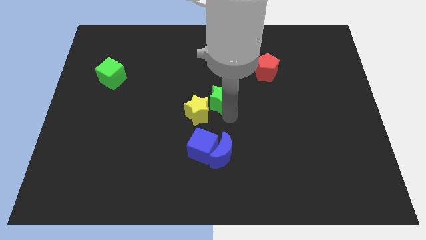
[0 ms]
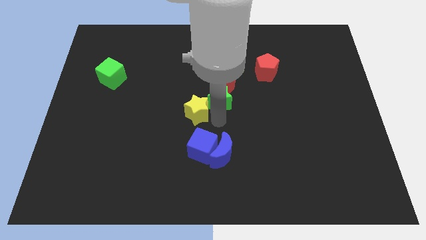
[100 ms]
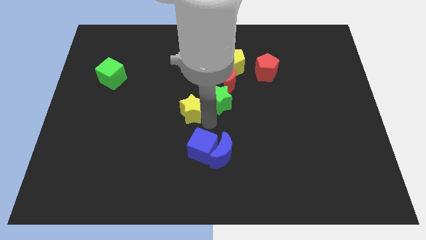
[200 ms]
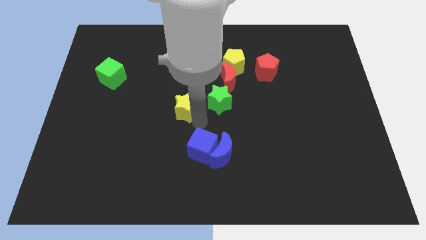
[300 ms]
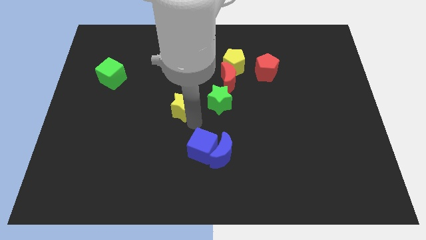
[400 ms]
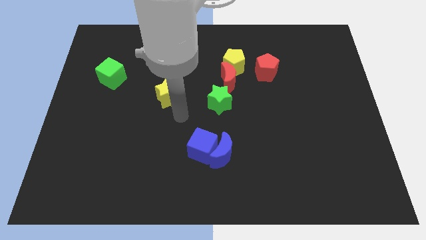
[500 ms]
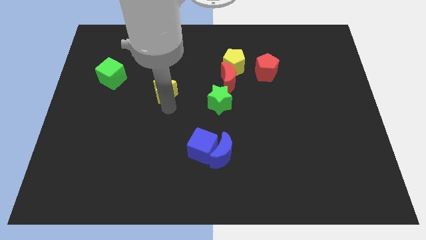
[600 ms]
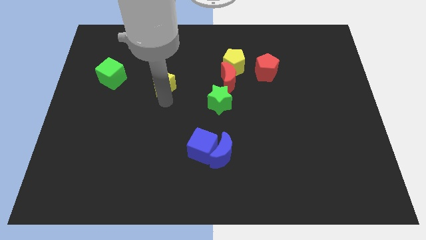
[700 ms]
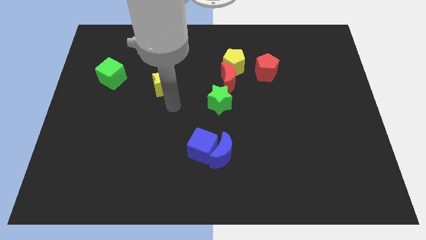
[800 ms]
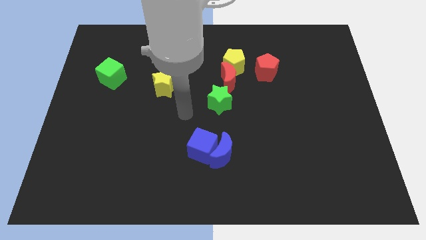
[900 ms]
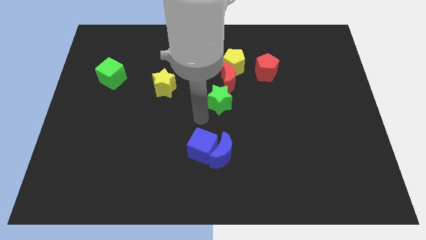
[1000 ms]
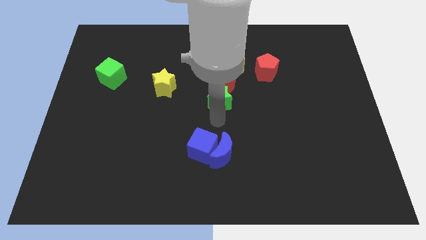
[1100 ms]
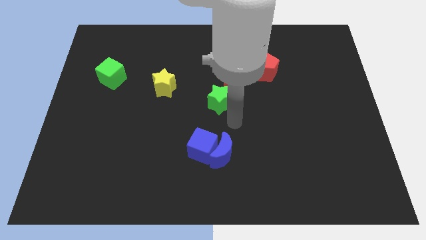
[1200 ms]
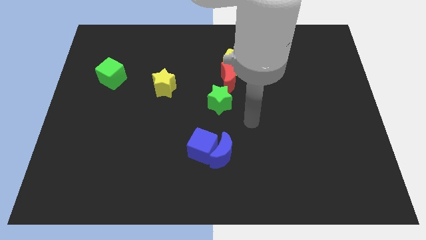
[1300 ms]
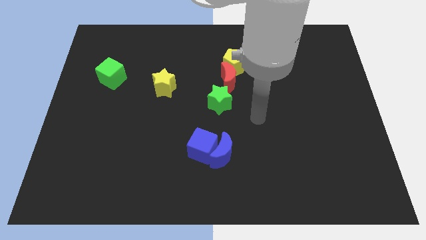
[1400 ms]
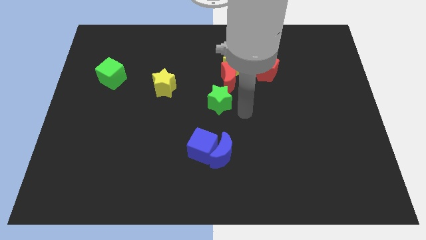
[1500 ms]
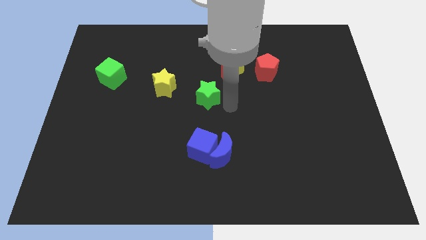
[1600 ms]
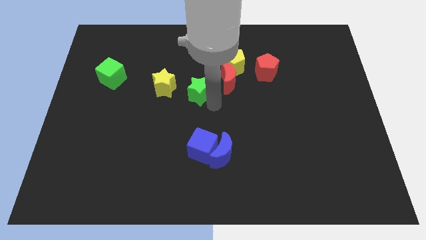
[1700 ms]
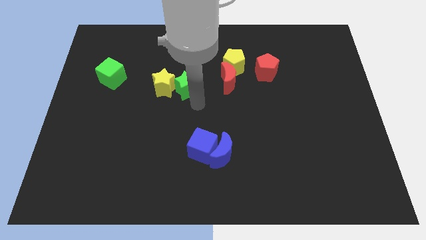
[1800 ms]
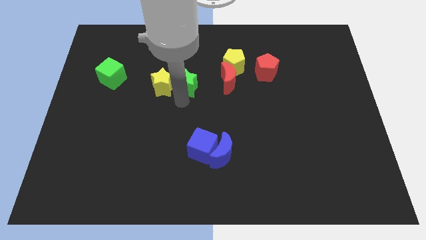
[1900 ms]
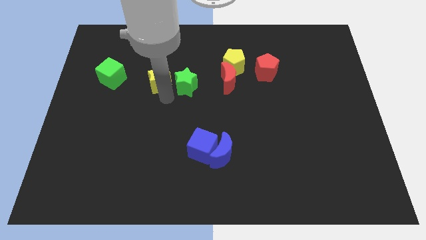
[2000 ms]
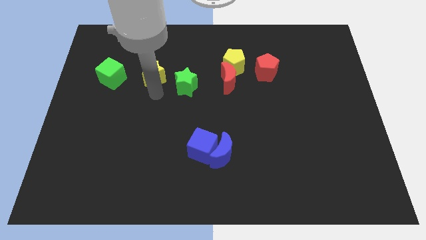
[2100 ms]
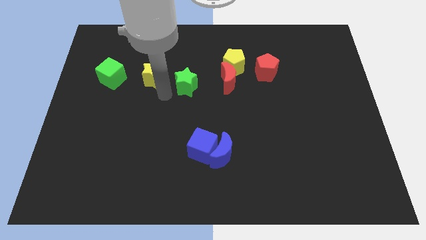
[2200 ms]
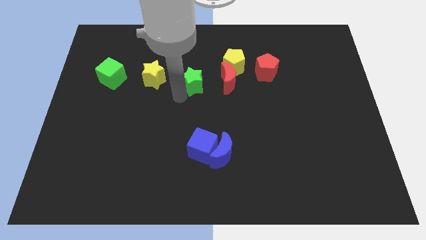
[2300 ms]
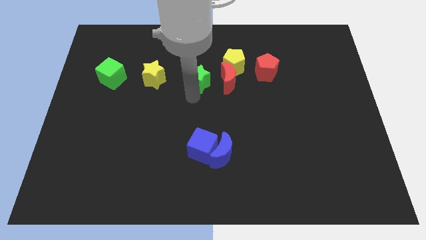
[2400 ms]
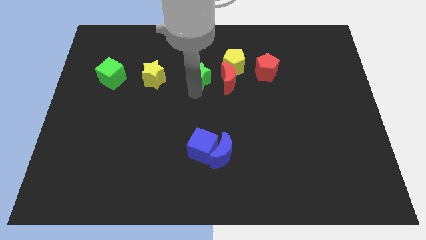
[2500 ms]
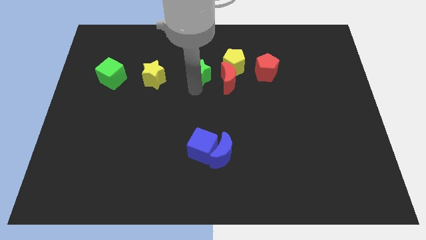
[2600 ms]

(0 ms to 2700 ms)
place the yellow star and green star in a horizontal line between the green cube and red moon

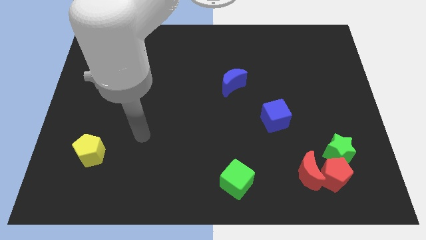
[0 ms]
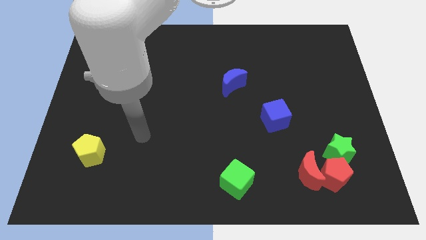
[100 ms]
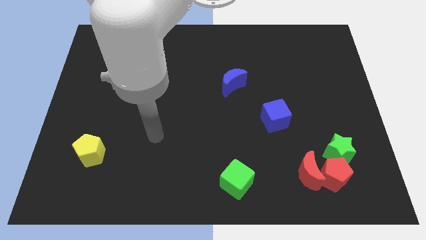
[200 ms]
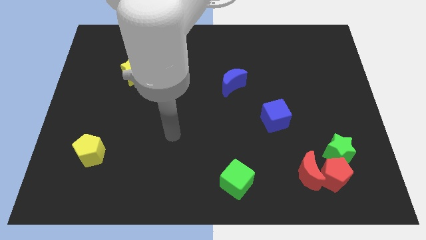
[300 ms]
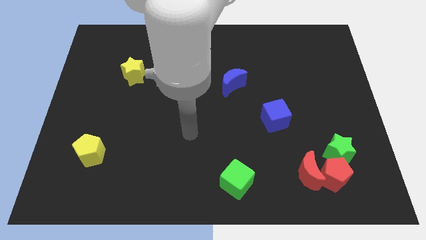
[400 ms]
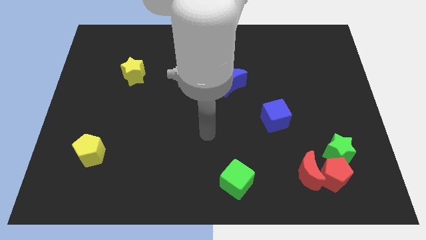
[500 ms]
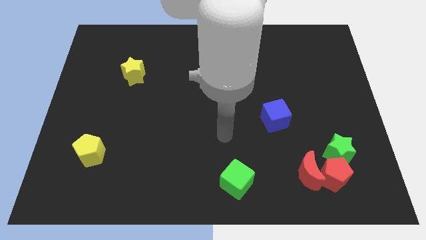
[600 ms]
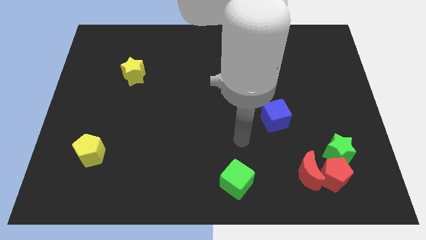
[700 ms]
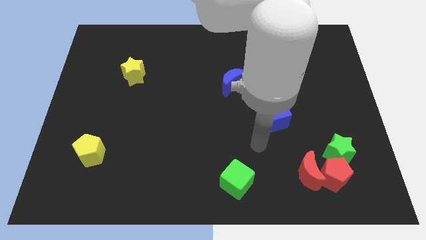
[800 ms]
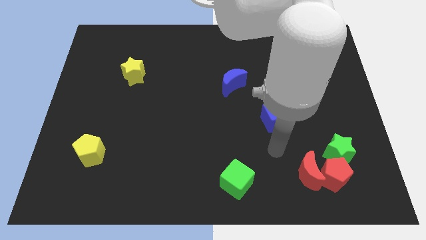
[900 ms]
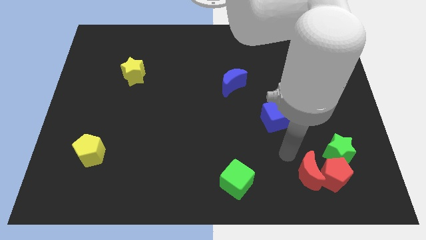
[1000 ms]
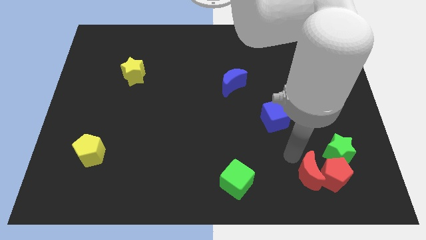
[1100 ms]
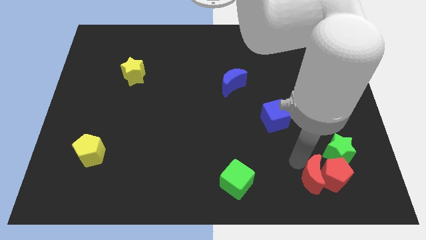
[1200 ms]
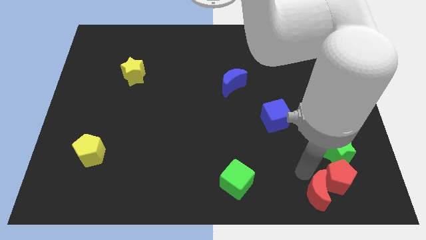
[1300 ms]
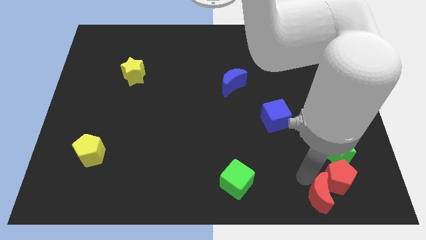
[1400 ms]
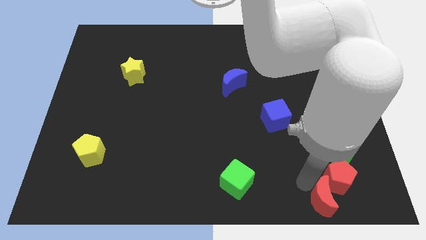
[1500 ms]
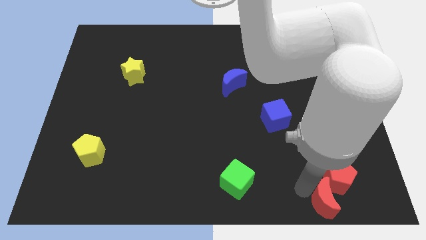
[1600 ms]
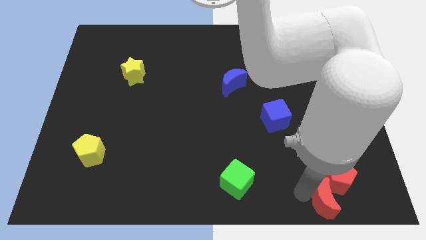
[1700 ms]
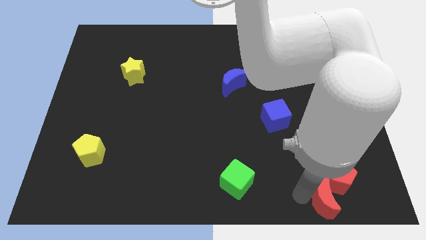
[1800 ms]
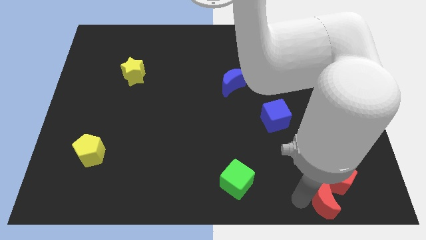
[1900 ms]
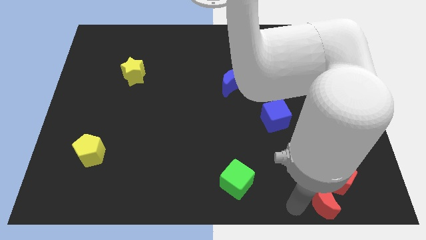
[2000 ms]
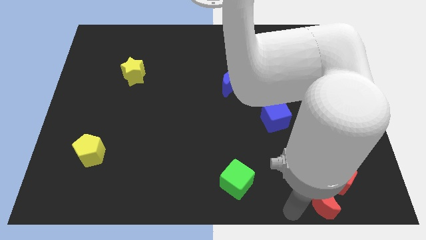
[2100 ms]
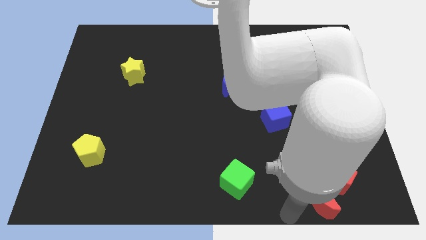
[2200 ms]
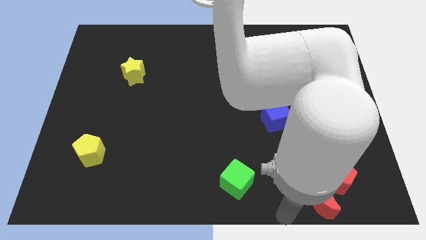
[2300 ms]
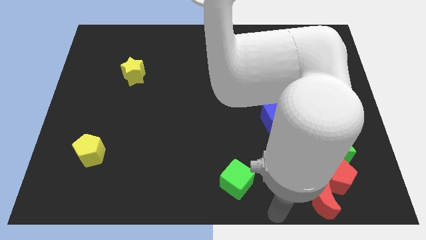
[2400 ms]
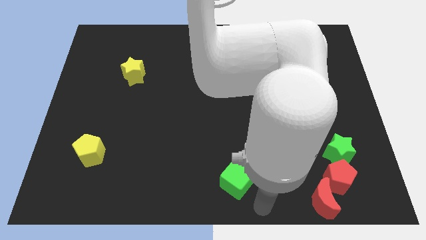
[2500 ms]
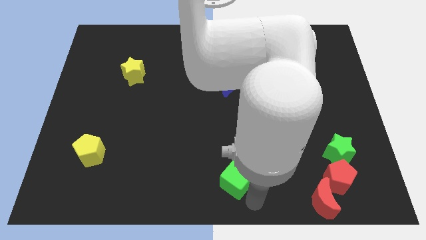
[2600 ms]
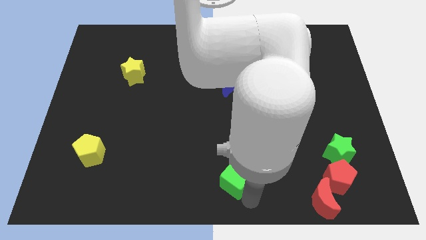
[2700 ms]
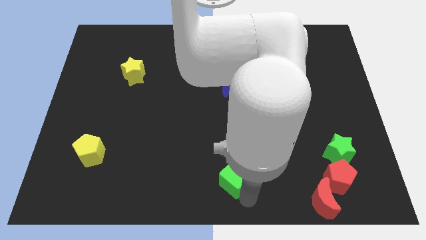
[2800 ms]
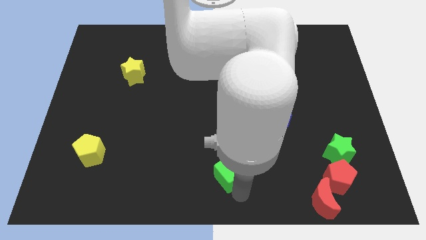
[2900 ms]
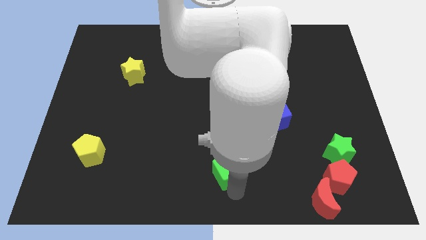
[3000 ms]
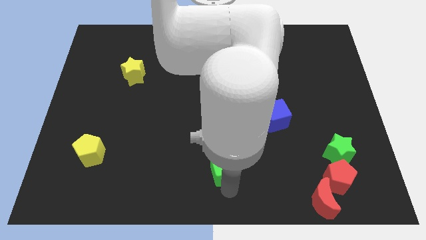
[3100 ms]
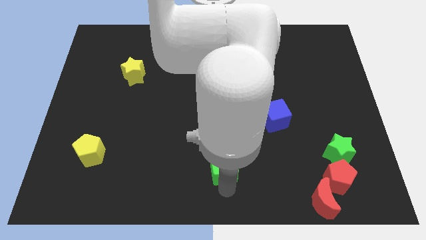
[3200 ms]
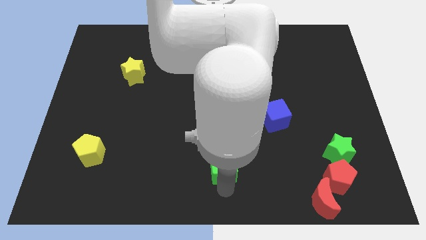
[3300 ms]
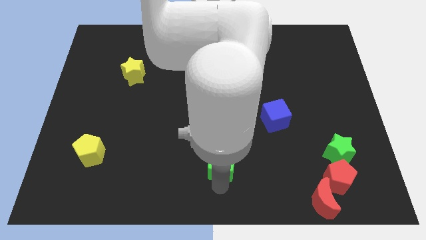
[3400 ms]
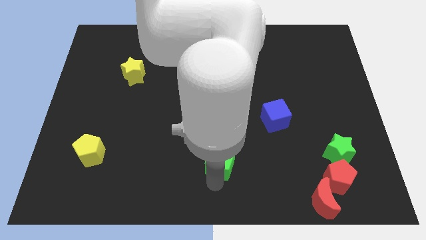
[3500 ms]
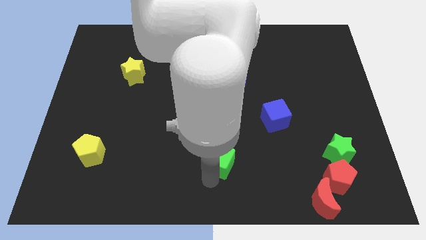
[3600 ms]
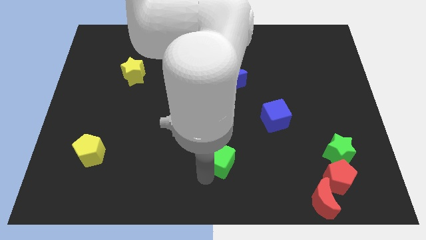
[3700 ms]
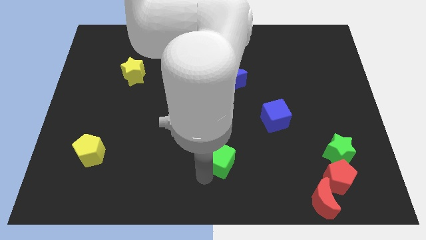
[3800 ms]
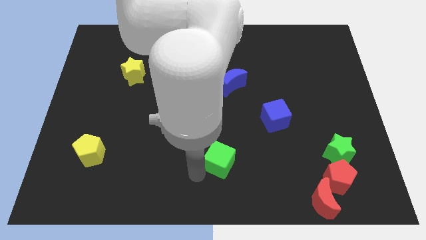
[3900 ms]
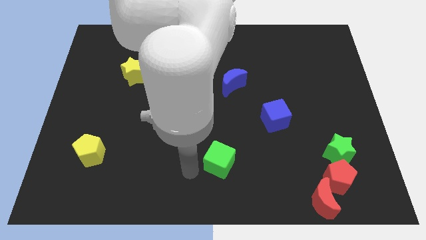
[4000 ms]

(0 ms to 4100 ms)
move your arm close to the green cube

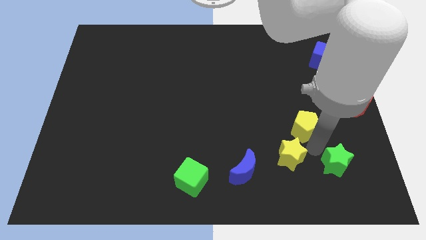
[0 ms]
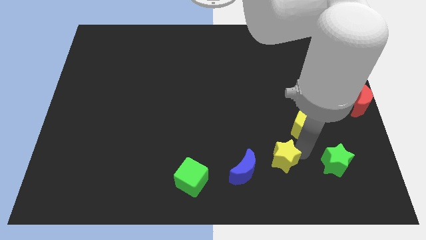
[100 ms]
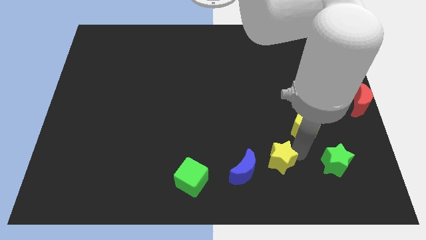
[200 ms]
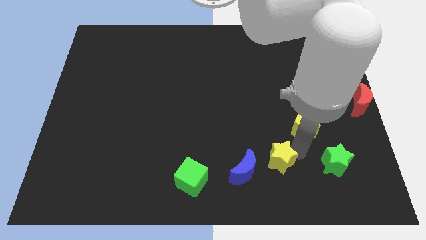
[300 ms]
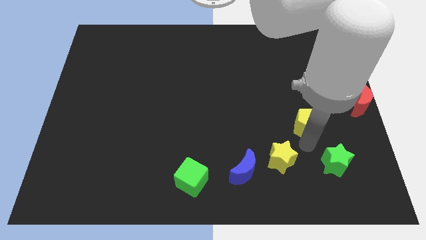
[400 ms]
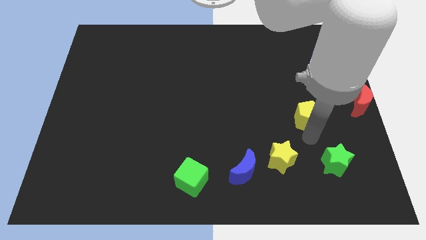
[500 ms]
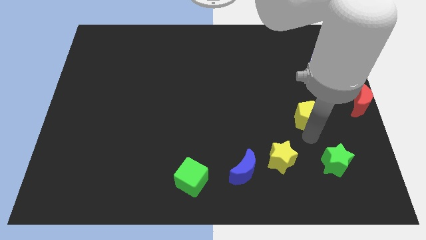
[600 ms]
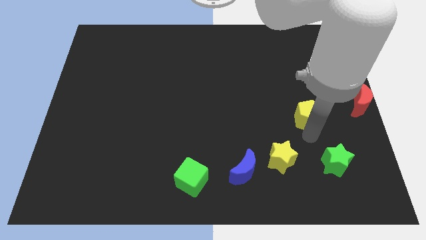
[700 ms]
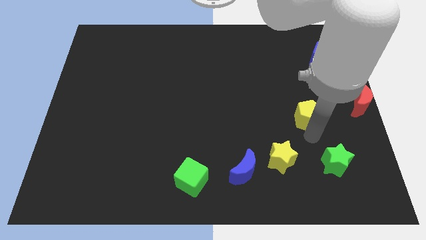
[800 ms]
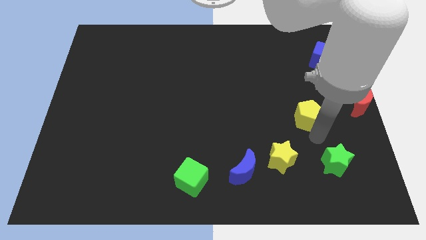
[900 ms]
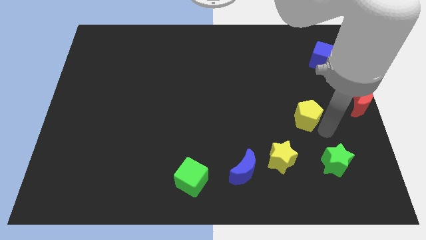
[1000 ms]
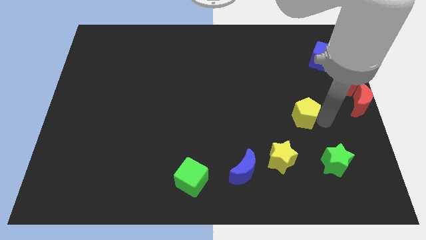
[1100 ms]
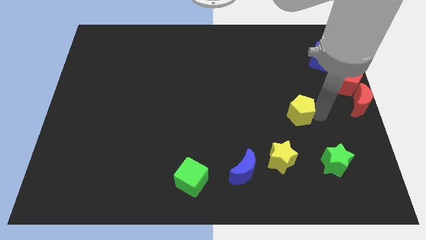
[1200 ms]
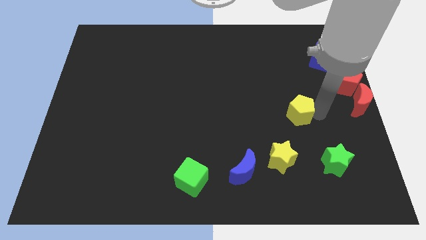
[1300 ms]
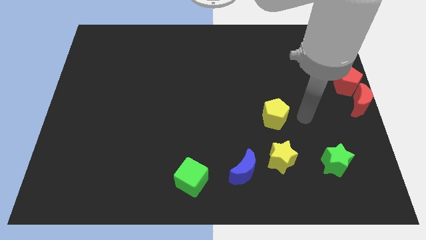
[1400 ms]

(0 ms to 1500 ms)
place the yellow pentagon above the yellow star

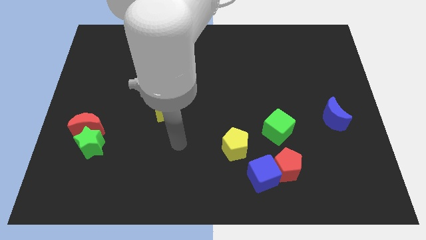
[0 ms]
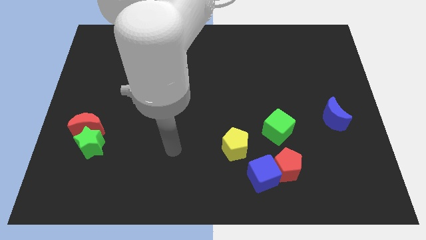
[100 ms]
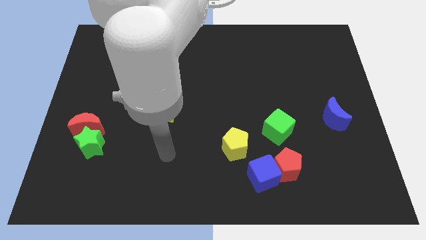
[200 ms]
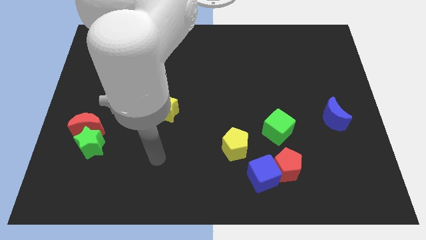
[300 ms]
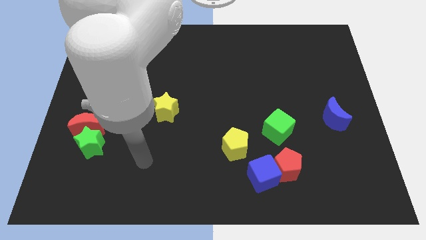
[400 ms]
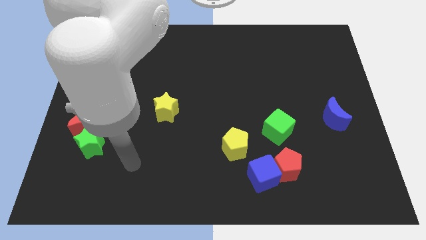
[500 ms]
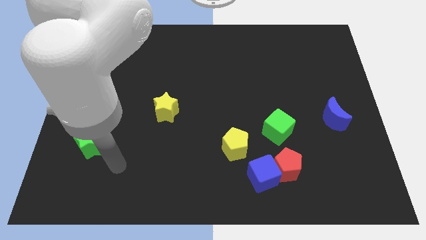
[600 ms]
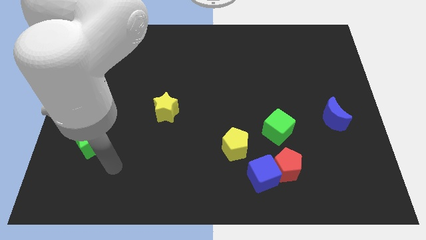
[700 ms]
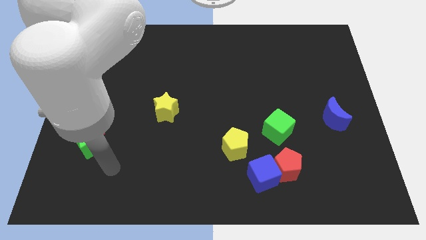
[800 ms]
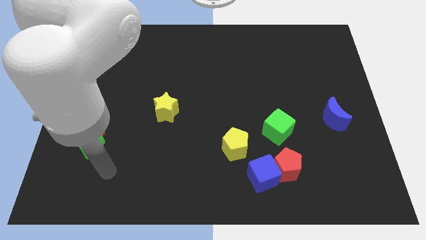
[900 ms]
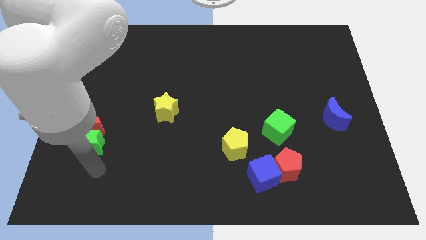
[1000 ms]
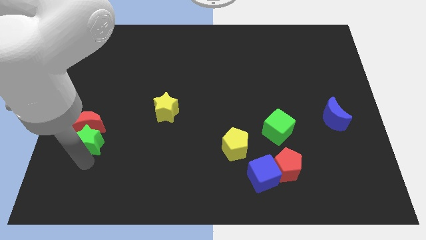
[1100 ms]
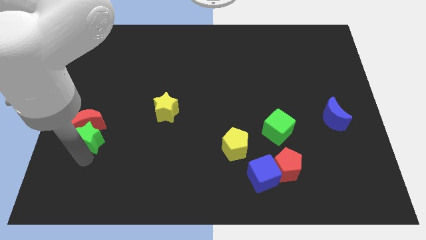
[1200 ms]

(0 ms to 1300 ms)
move your arm to the bottom of the green star
